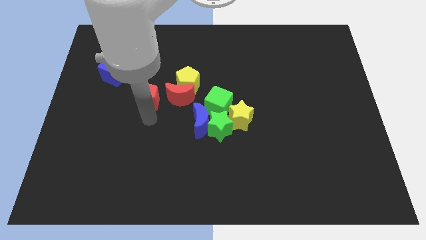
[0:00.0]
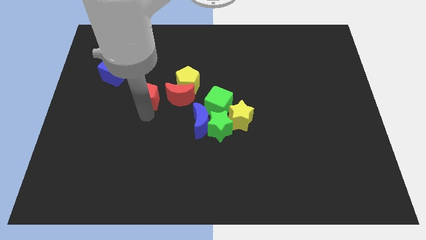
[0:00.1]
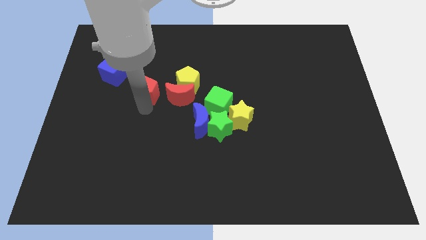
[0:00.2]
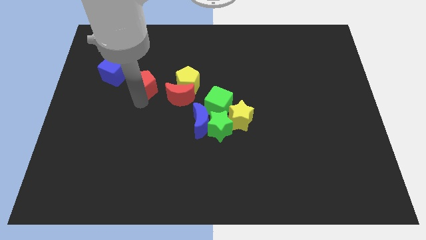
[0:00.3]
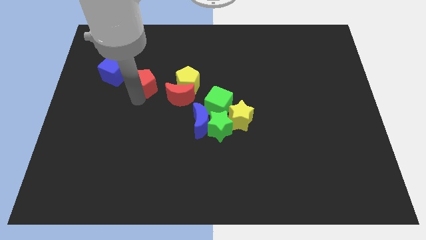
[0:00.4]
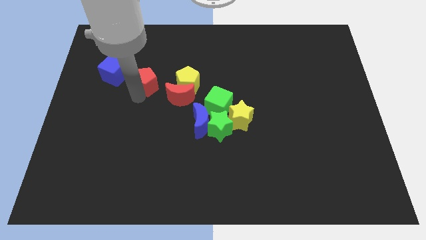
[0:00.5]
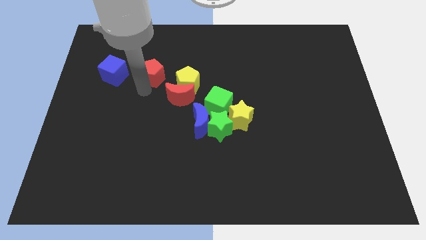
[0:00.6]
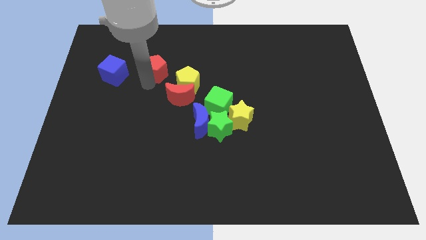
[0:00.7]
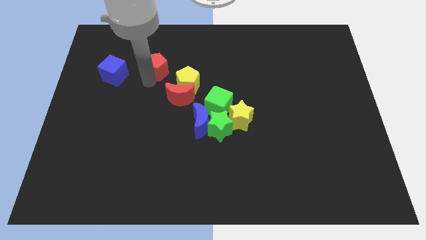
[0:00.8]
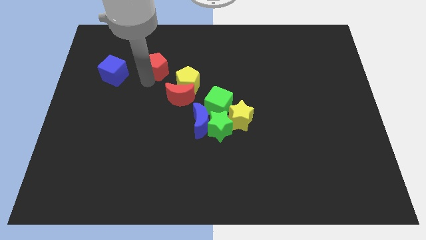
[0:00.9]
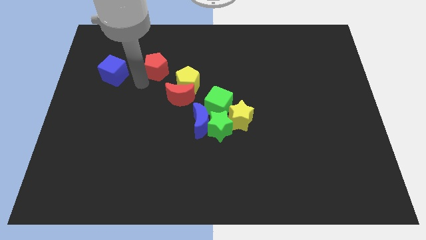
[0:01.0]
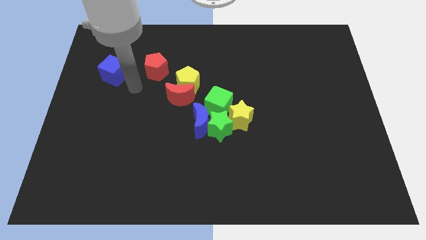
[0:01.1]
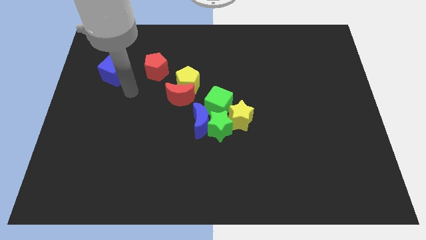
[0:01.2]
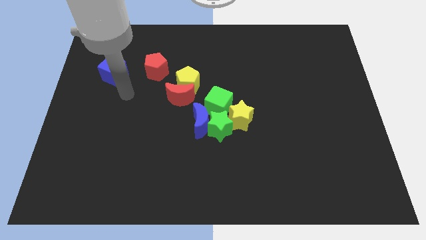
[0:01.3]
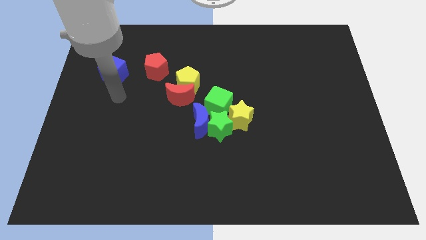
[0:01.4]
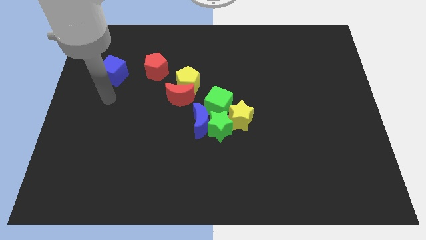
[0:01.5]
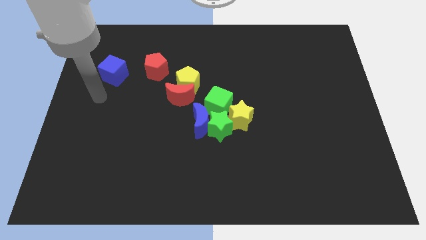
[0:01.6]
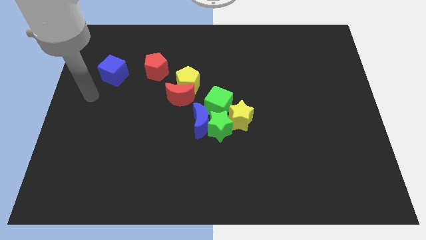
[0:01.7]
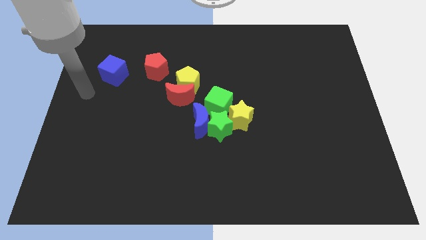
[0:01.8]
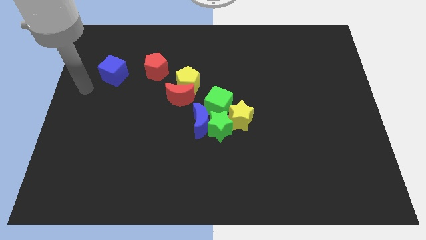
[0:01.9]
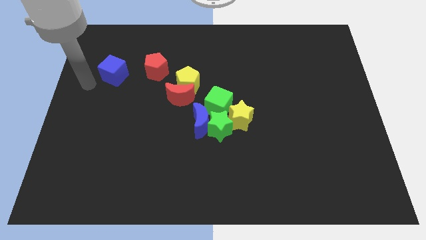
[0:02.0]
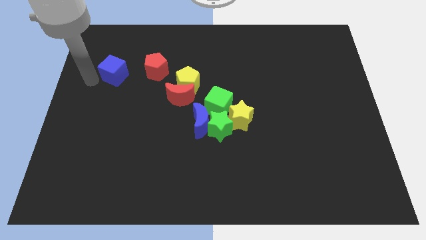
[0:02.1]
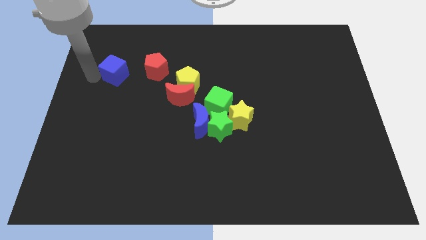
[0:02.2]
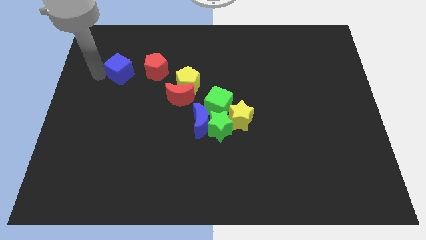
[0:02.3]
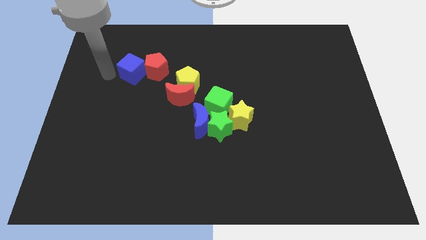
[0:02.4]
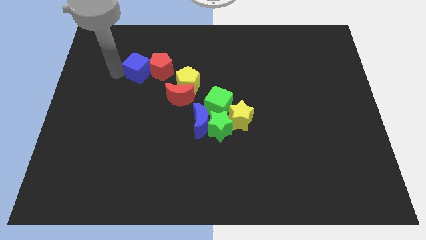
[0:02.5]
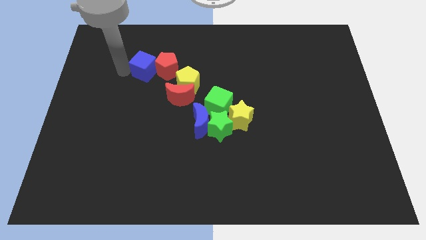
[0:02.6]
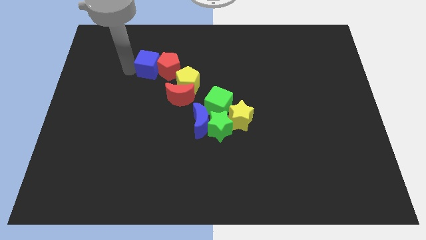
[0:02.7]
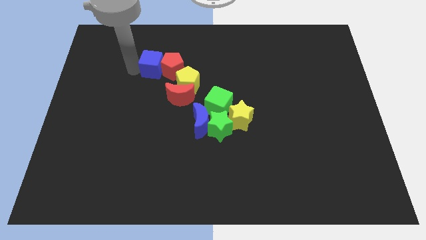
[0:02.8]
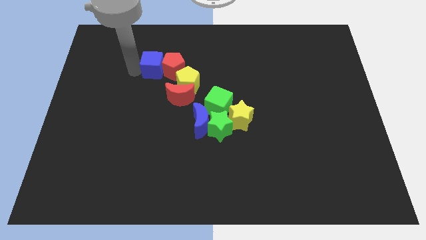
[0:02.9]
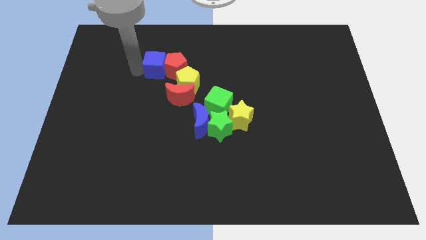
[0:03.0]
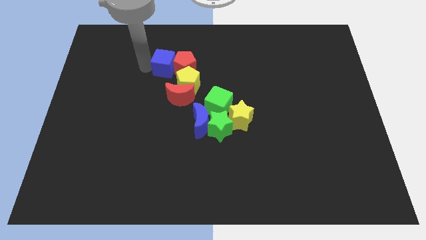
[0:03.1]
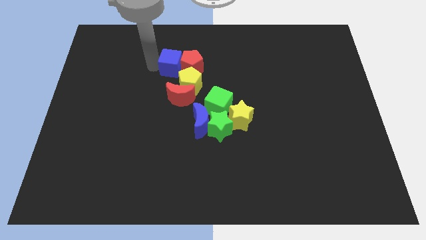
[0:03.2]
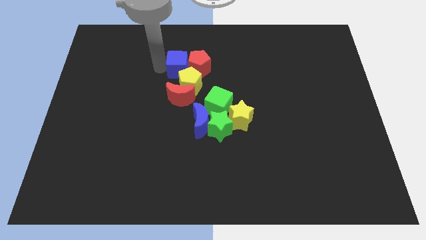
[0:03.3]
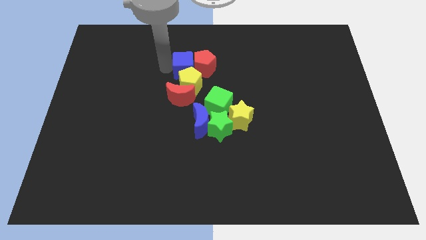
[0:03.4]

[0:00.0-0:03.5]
slide the blue cube and red pentagon to the top side of the yellow pentagon

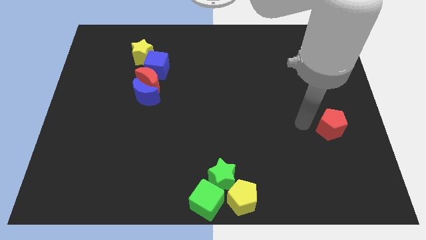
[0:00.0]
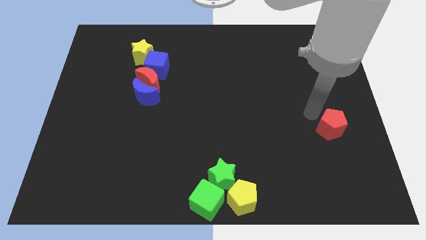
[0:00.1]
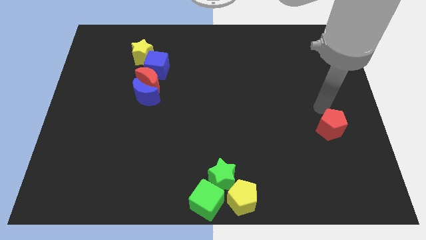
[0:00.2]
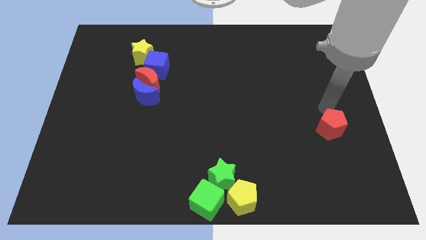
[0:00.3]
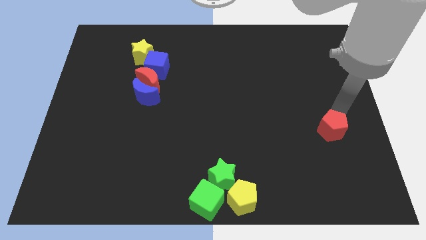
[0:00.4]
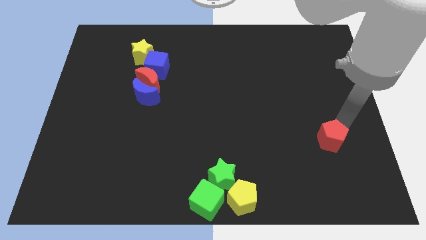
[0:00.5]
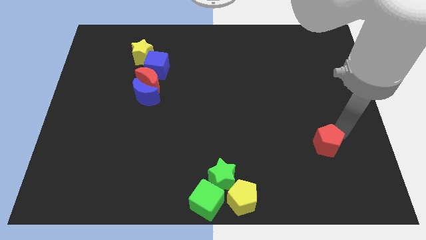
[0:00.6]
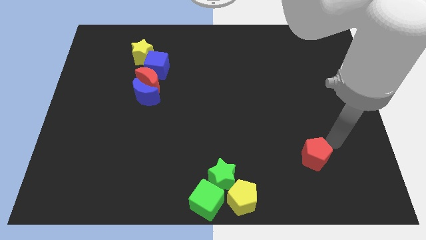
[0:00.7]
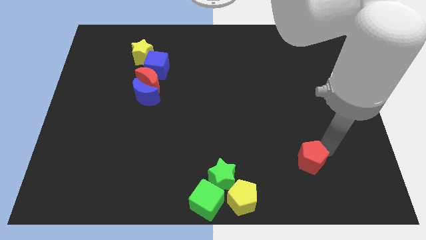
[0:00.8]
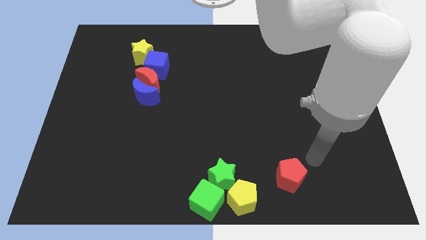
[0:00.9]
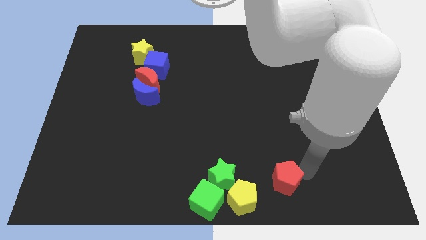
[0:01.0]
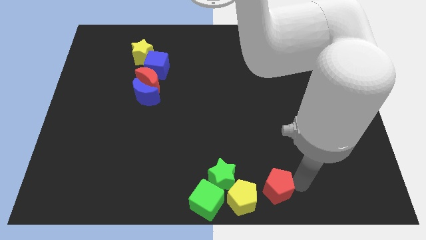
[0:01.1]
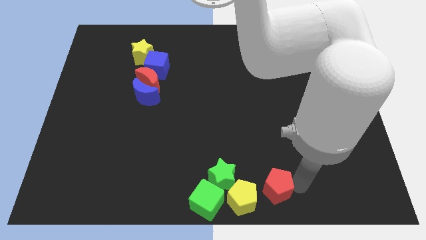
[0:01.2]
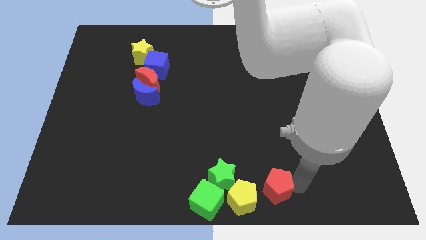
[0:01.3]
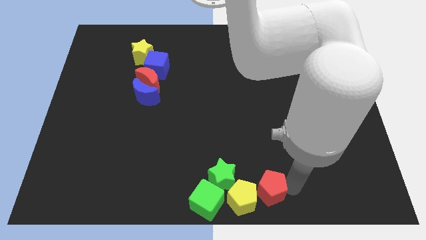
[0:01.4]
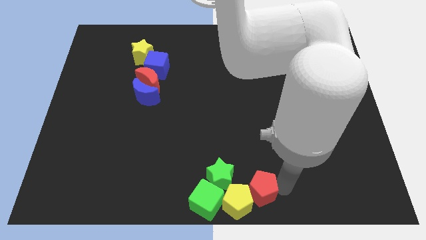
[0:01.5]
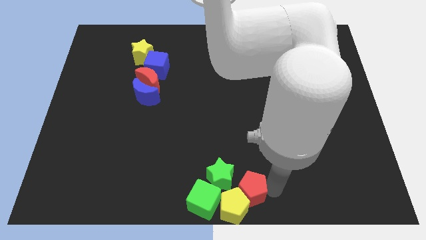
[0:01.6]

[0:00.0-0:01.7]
place red pentagon close to yellow pentagon

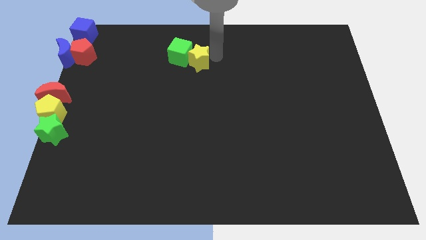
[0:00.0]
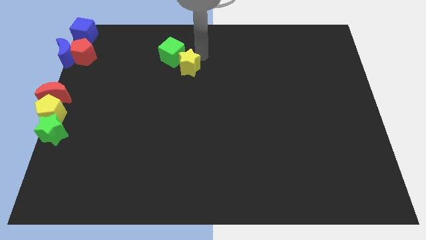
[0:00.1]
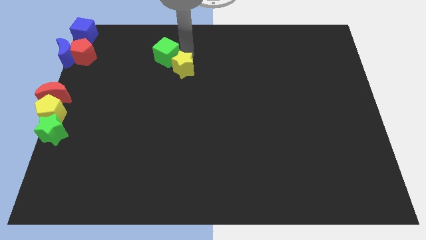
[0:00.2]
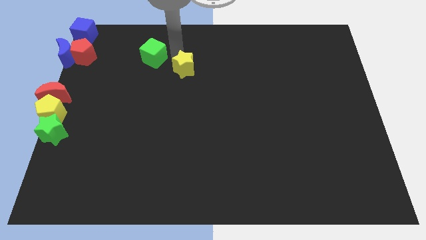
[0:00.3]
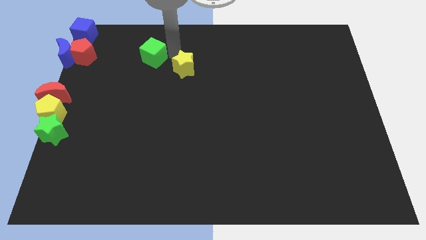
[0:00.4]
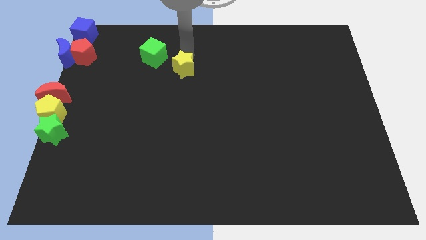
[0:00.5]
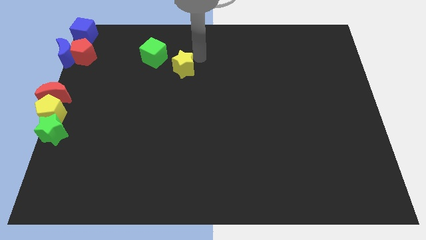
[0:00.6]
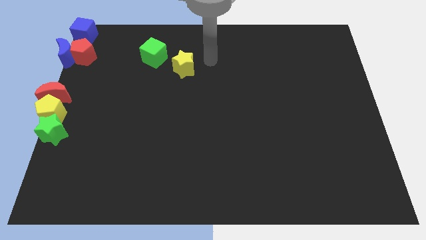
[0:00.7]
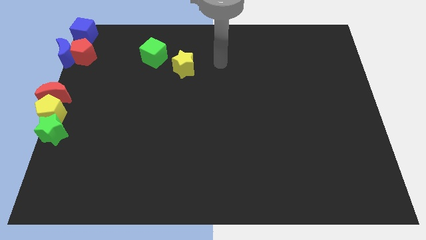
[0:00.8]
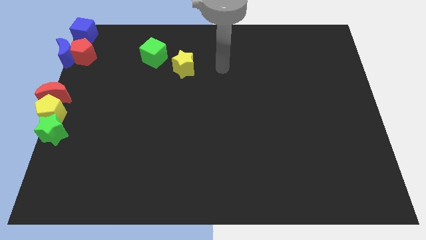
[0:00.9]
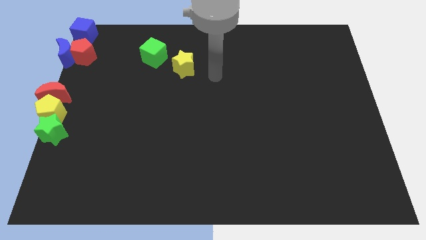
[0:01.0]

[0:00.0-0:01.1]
separate the green cube and yellow star

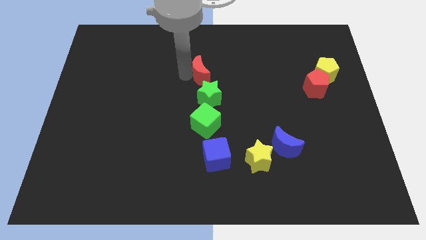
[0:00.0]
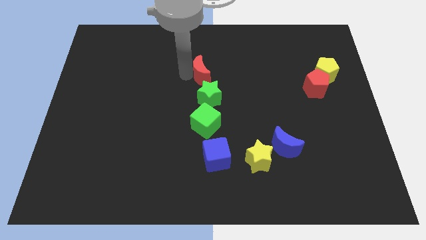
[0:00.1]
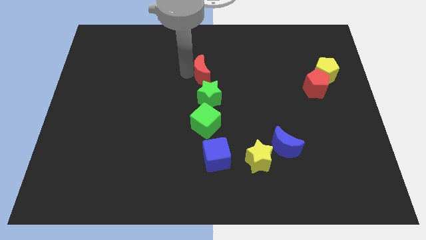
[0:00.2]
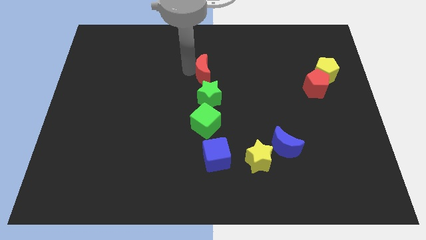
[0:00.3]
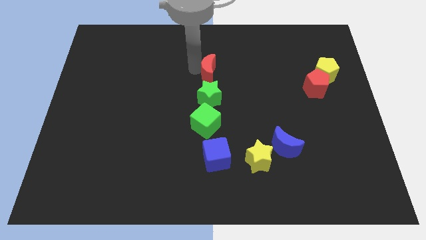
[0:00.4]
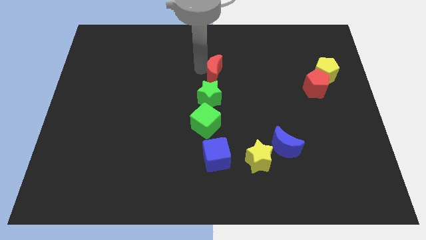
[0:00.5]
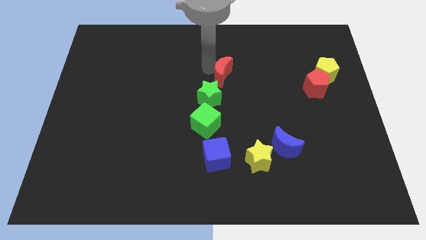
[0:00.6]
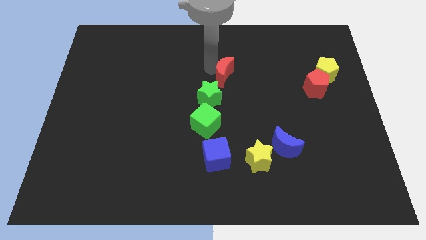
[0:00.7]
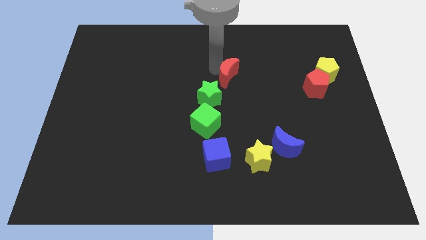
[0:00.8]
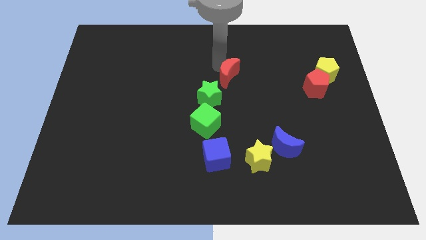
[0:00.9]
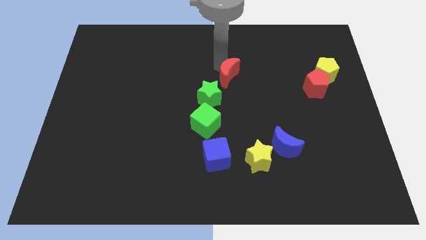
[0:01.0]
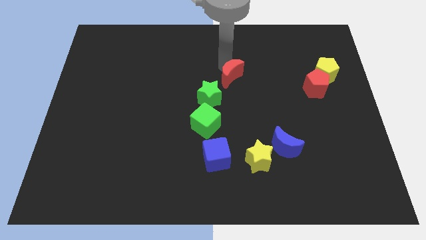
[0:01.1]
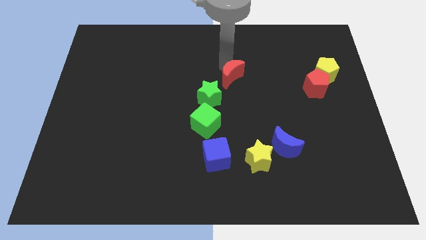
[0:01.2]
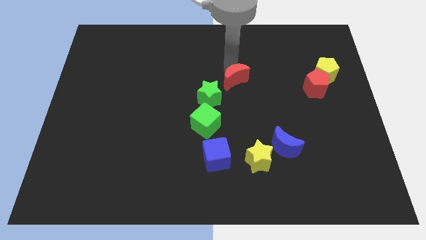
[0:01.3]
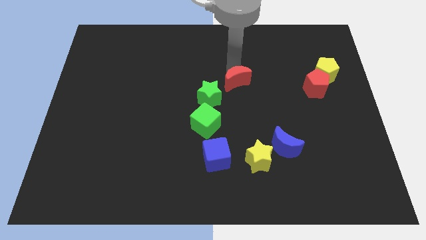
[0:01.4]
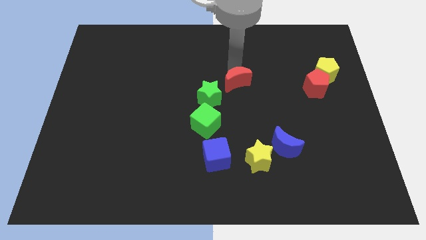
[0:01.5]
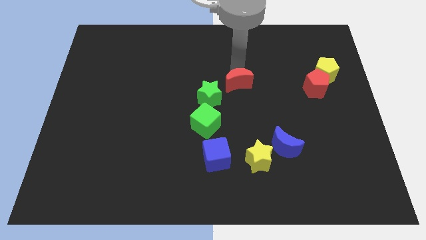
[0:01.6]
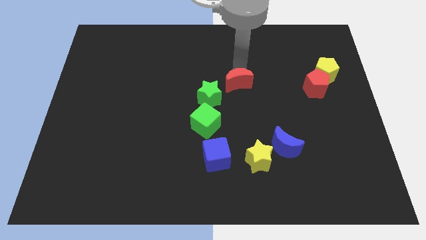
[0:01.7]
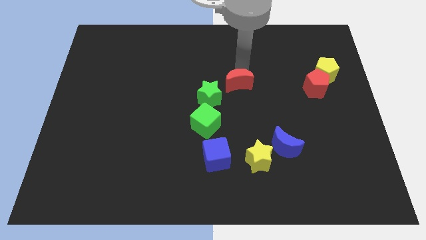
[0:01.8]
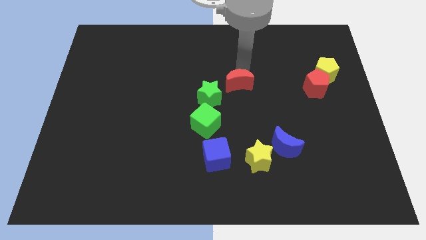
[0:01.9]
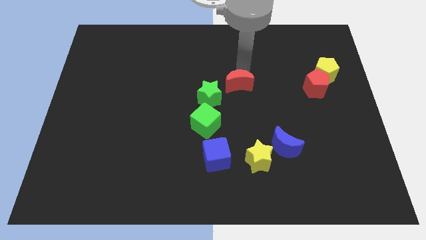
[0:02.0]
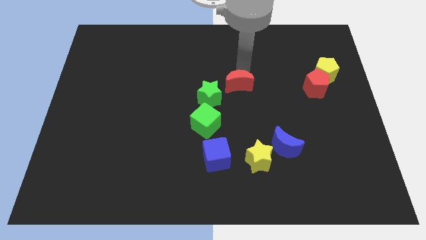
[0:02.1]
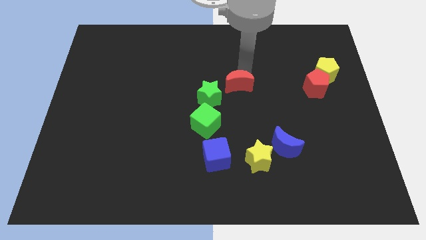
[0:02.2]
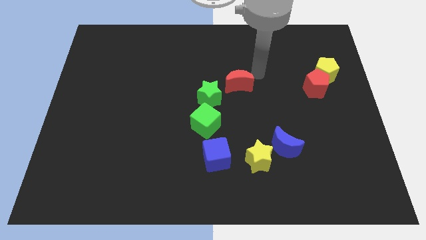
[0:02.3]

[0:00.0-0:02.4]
push the red crescent to top right side to the green star
